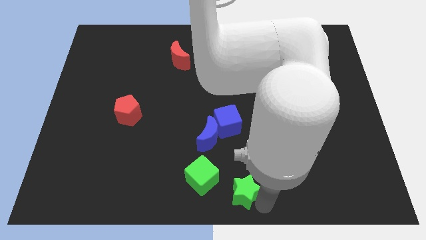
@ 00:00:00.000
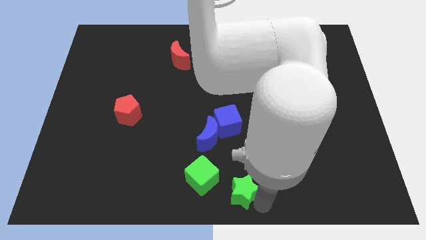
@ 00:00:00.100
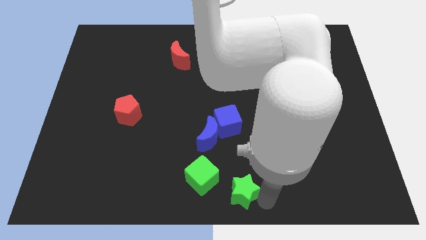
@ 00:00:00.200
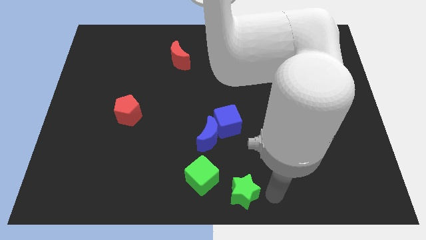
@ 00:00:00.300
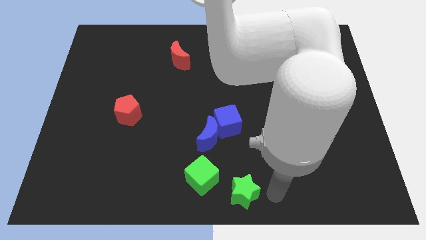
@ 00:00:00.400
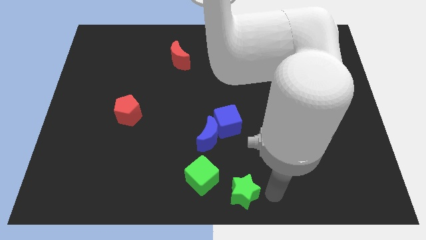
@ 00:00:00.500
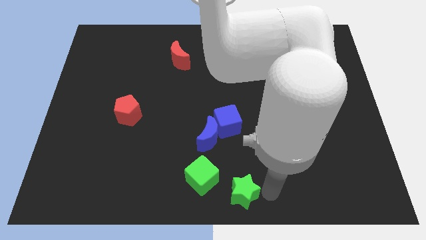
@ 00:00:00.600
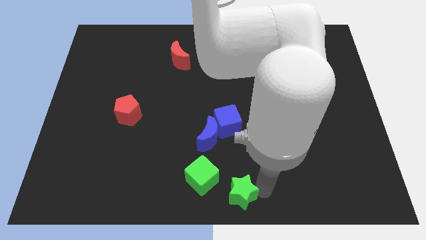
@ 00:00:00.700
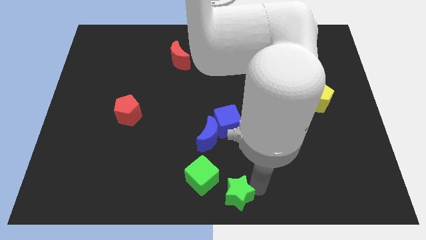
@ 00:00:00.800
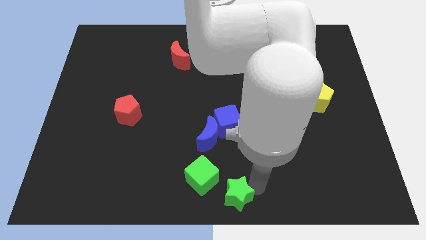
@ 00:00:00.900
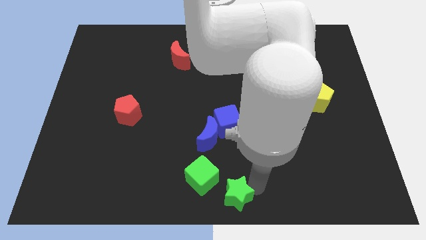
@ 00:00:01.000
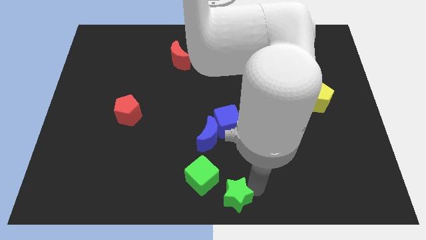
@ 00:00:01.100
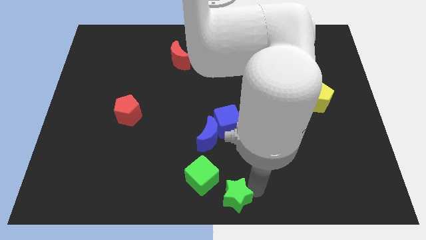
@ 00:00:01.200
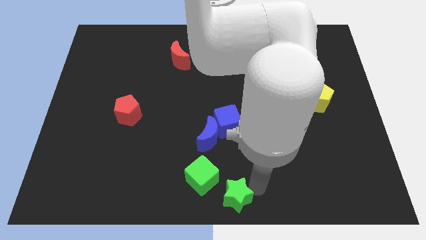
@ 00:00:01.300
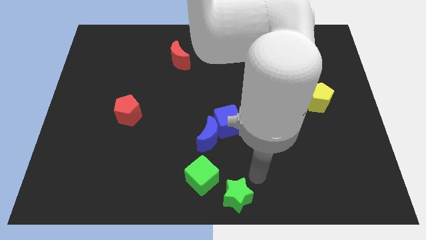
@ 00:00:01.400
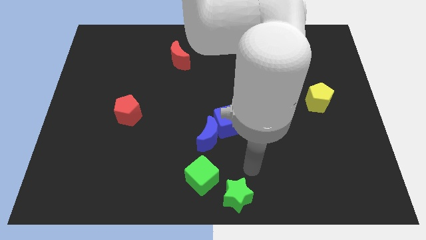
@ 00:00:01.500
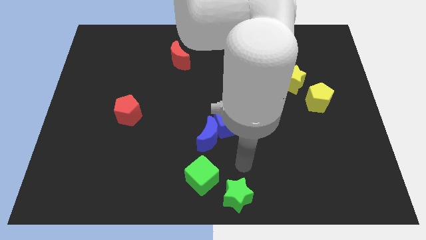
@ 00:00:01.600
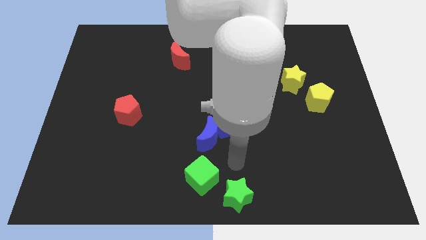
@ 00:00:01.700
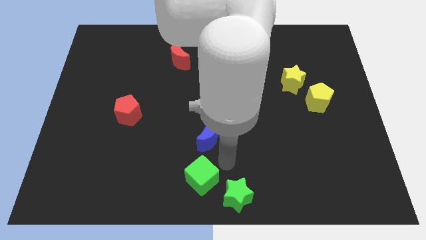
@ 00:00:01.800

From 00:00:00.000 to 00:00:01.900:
touch green star slightly

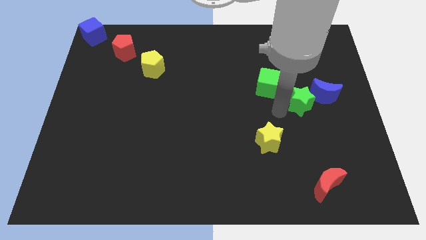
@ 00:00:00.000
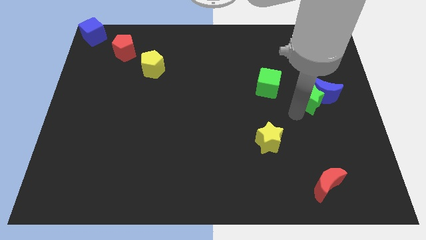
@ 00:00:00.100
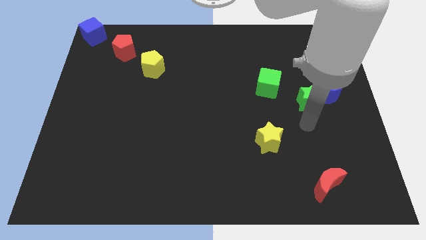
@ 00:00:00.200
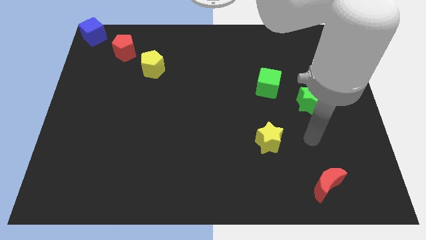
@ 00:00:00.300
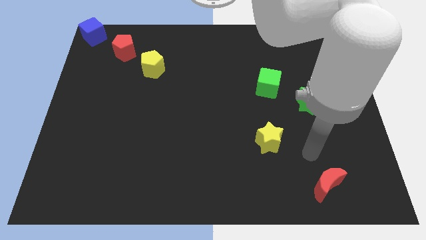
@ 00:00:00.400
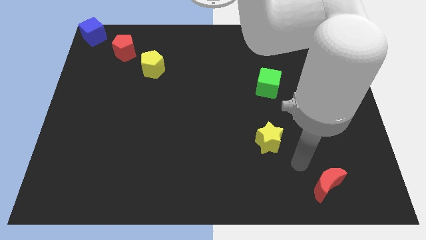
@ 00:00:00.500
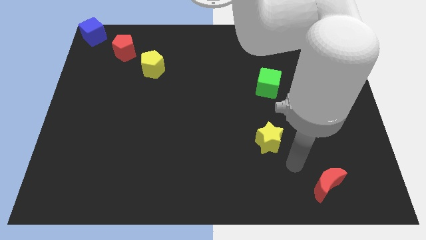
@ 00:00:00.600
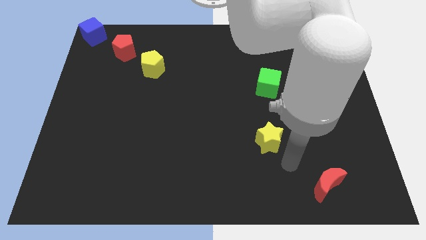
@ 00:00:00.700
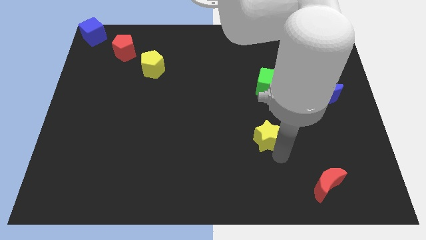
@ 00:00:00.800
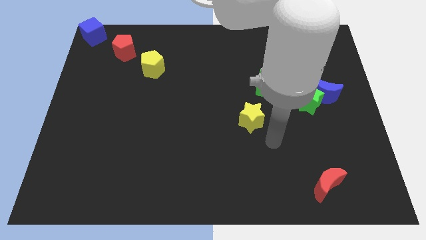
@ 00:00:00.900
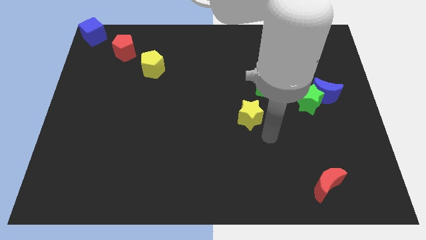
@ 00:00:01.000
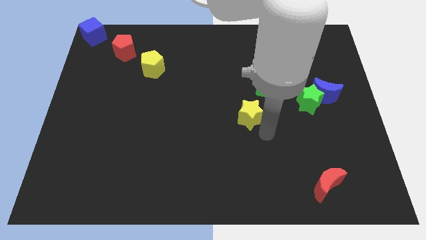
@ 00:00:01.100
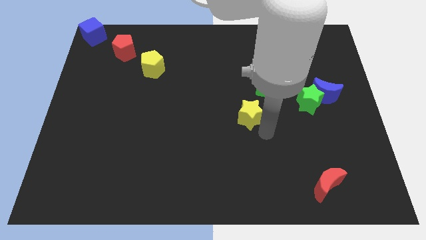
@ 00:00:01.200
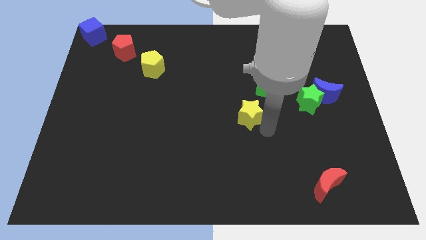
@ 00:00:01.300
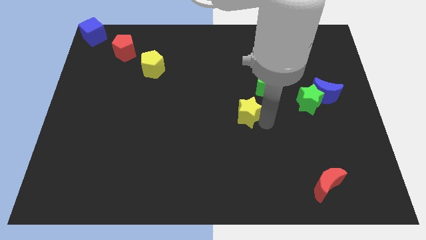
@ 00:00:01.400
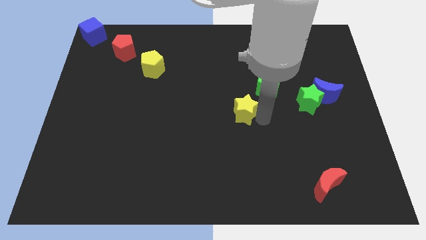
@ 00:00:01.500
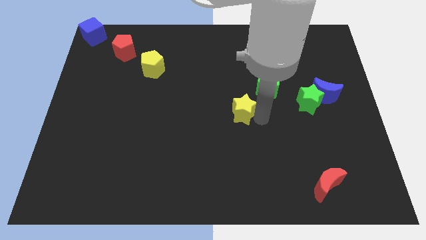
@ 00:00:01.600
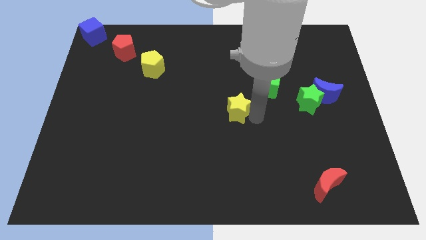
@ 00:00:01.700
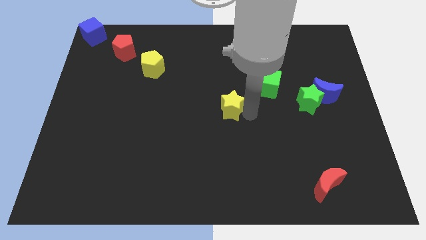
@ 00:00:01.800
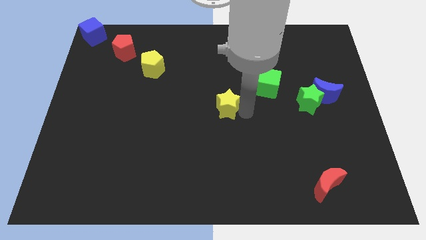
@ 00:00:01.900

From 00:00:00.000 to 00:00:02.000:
move the yellow star near to the green cube

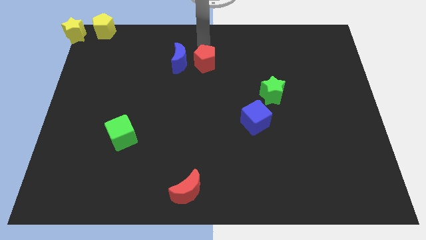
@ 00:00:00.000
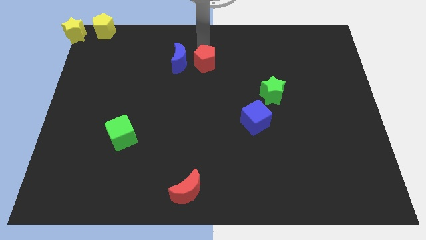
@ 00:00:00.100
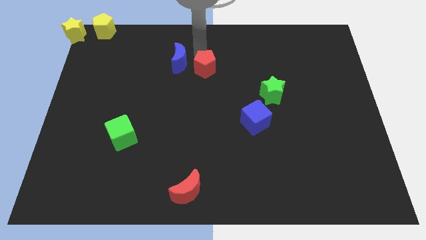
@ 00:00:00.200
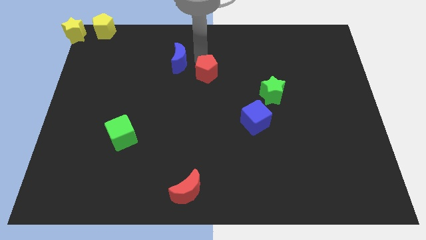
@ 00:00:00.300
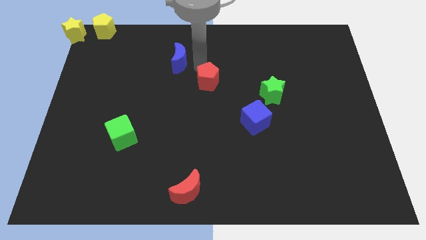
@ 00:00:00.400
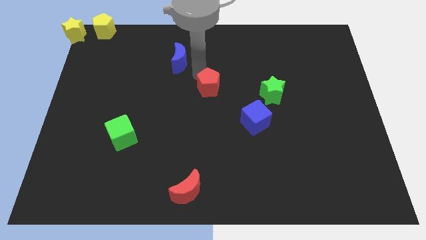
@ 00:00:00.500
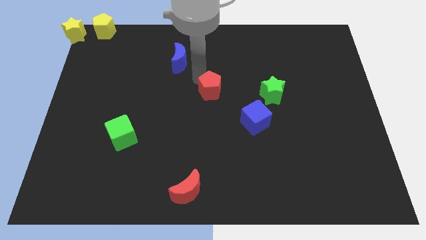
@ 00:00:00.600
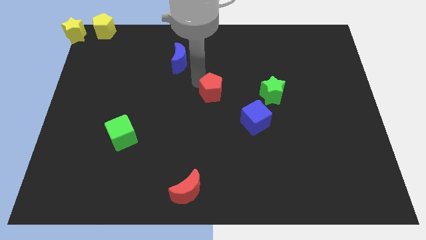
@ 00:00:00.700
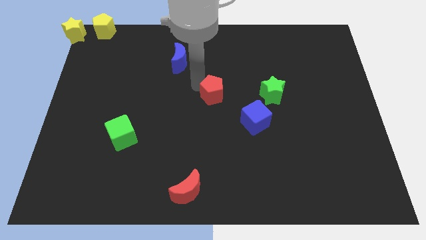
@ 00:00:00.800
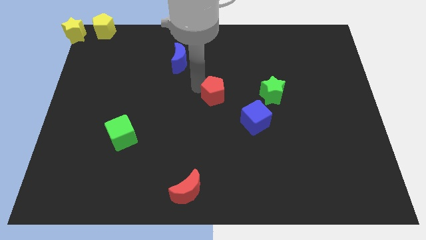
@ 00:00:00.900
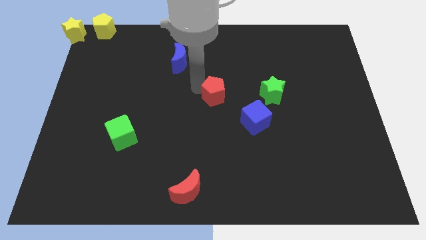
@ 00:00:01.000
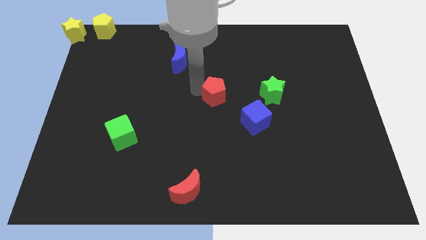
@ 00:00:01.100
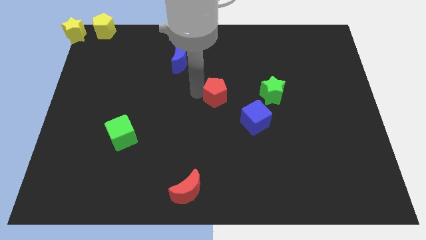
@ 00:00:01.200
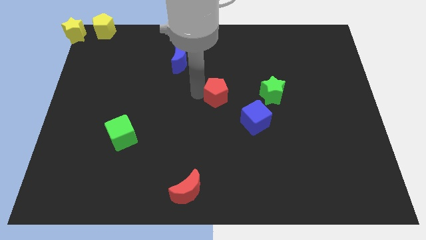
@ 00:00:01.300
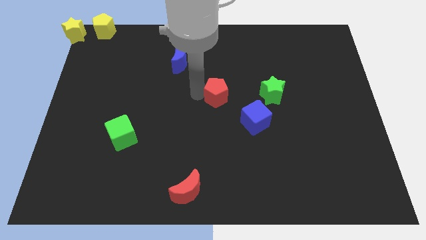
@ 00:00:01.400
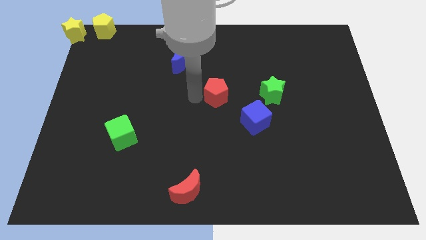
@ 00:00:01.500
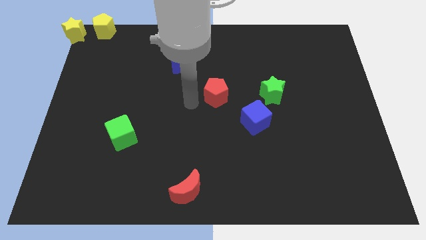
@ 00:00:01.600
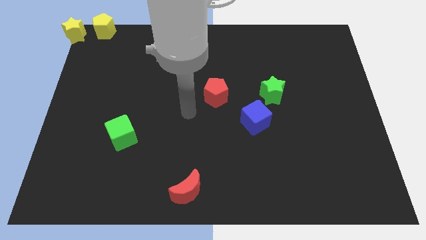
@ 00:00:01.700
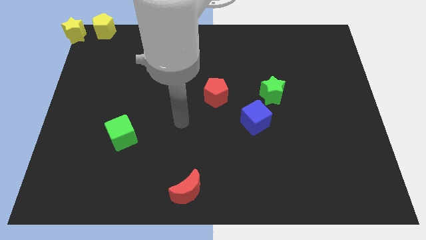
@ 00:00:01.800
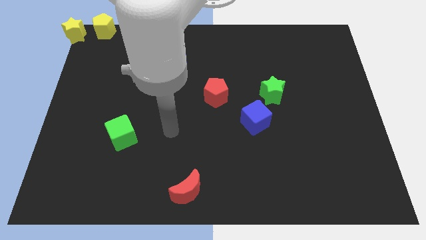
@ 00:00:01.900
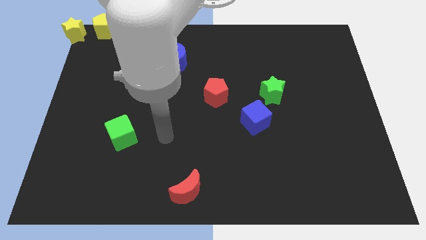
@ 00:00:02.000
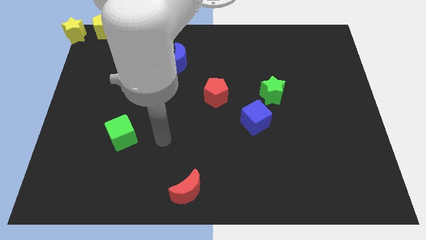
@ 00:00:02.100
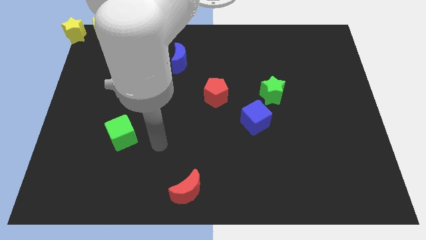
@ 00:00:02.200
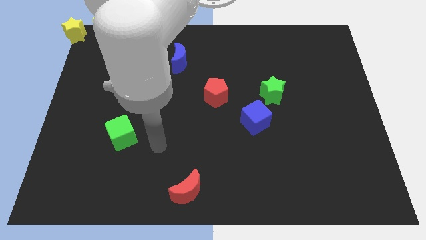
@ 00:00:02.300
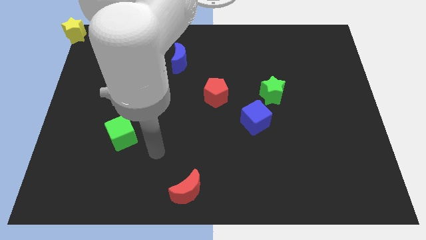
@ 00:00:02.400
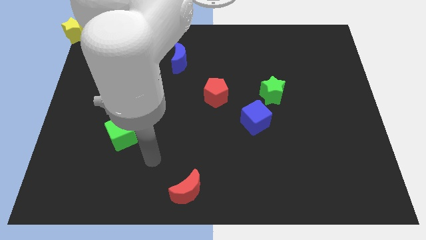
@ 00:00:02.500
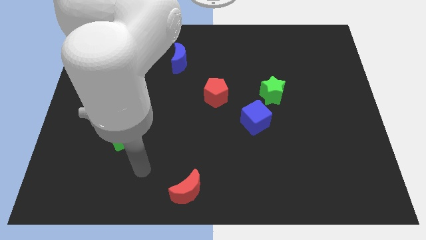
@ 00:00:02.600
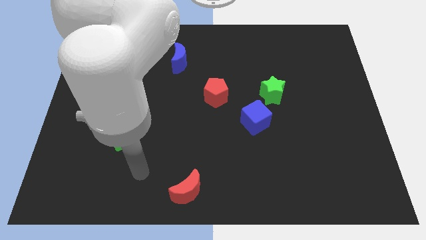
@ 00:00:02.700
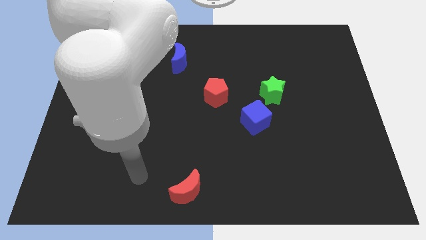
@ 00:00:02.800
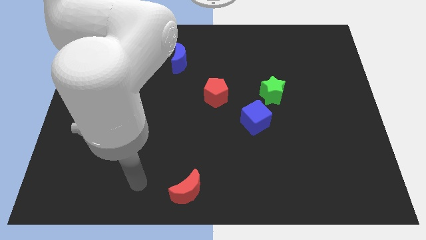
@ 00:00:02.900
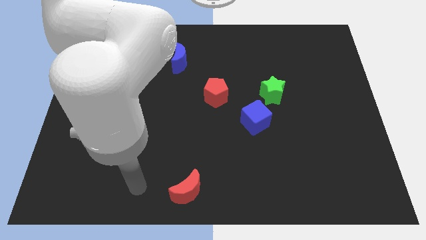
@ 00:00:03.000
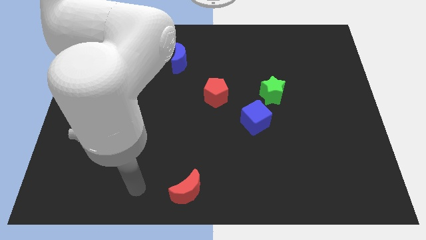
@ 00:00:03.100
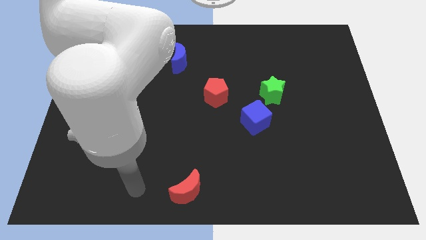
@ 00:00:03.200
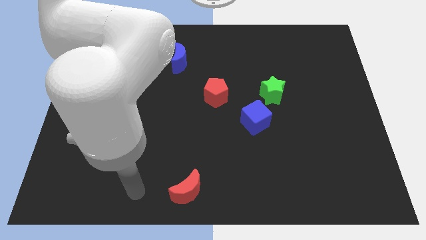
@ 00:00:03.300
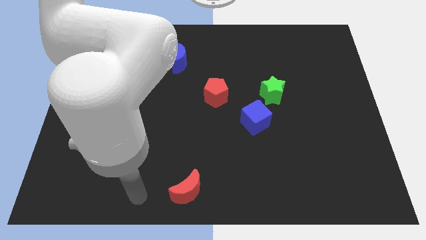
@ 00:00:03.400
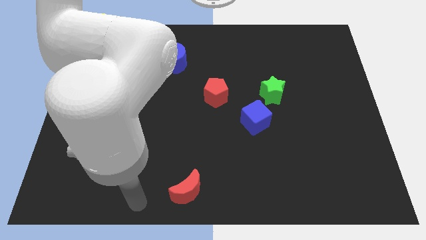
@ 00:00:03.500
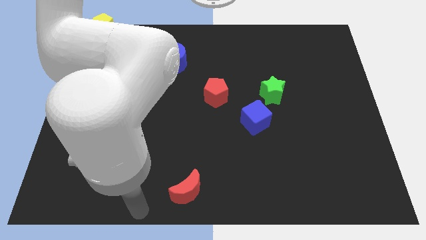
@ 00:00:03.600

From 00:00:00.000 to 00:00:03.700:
move red pentagon left beside the green star

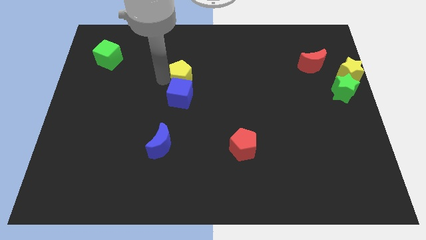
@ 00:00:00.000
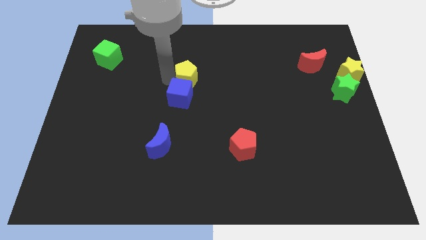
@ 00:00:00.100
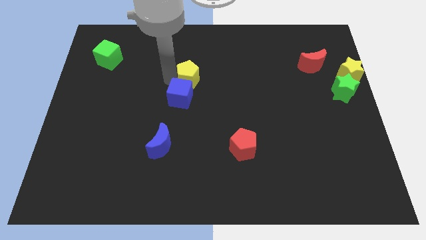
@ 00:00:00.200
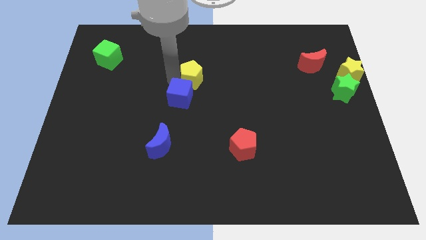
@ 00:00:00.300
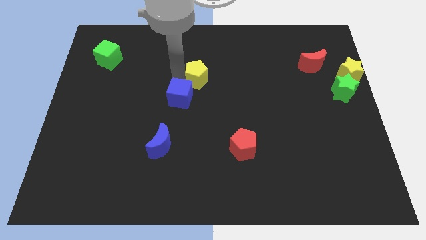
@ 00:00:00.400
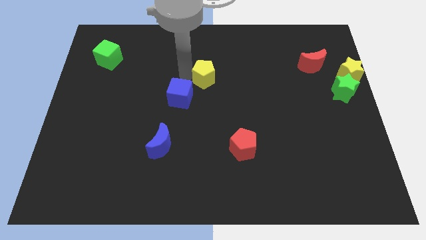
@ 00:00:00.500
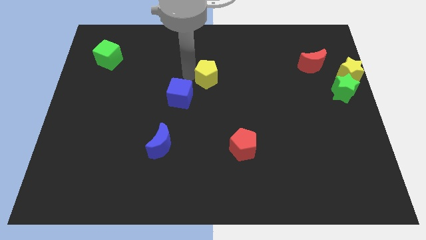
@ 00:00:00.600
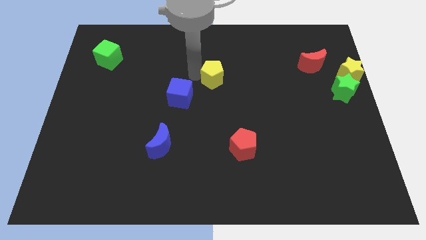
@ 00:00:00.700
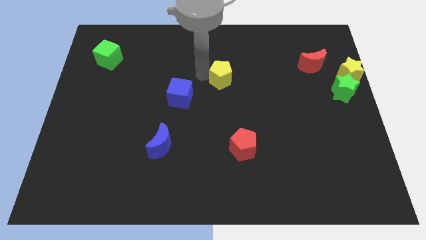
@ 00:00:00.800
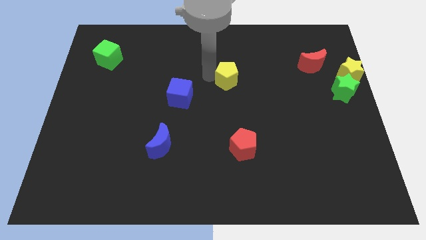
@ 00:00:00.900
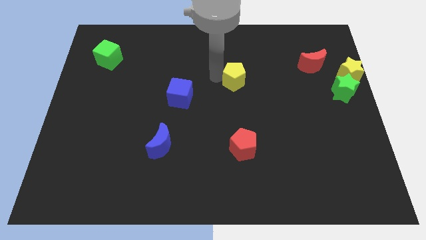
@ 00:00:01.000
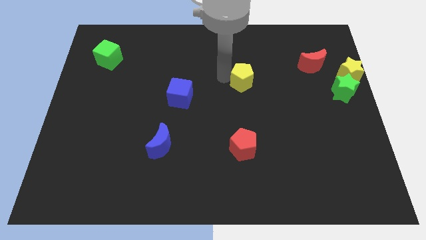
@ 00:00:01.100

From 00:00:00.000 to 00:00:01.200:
separate yellow pentagon from blue cube

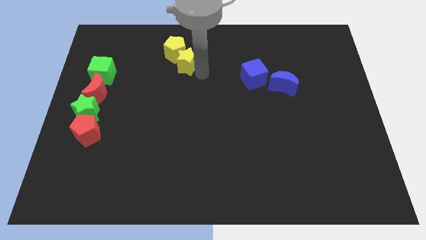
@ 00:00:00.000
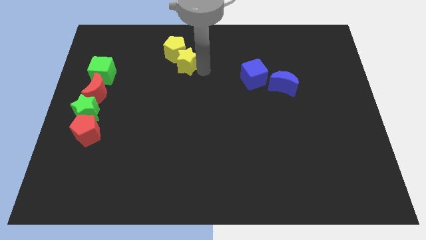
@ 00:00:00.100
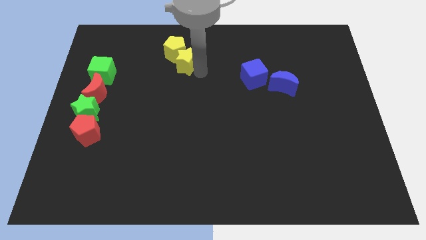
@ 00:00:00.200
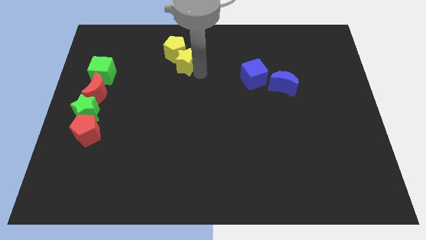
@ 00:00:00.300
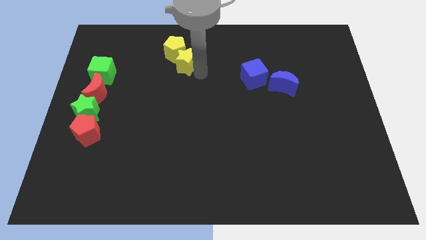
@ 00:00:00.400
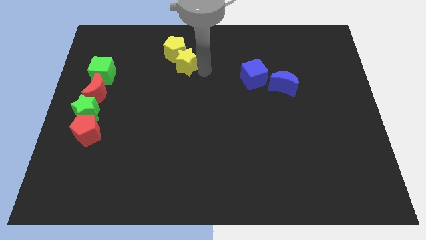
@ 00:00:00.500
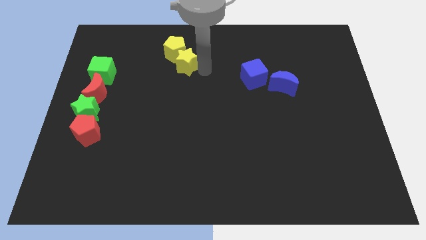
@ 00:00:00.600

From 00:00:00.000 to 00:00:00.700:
push yellow star in yellow pentagon
